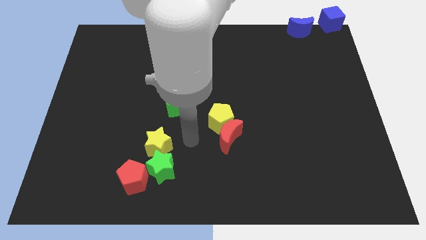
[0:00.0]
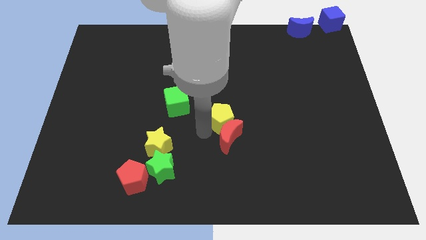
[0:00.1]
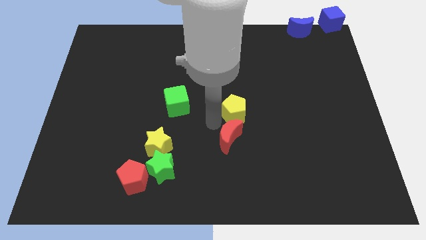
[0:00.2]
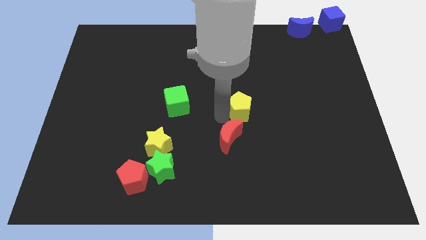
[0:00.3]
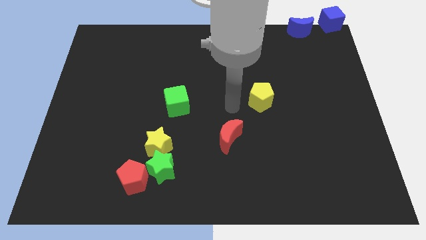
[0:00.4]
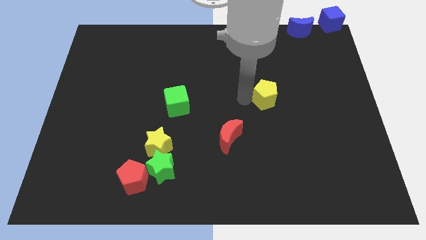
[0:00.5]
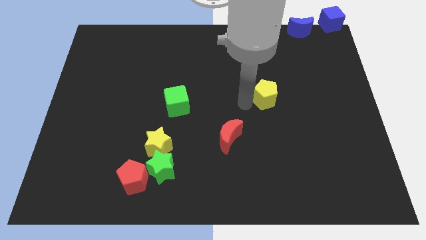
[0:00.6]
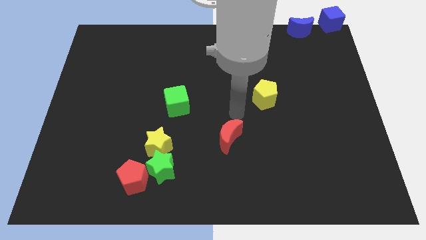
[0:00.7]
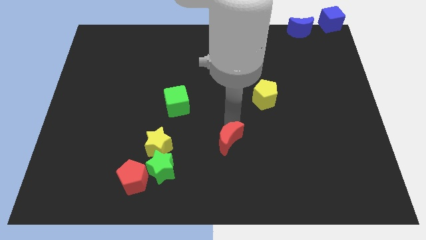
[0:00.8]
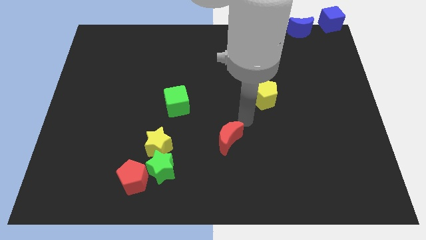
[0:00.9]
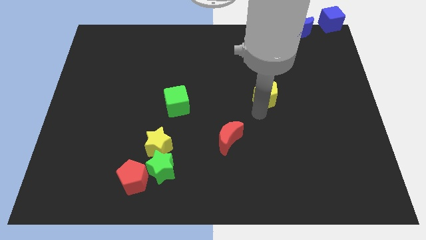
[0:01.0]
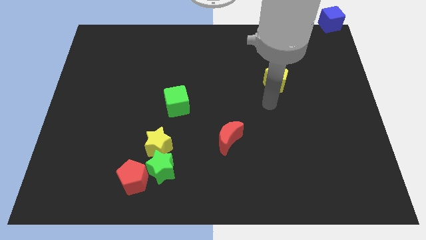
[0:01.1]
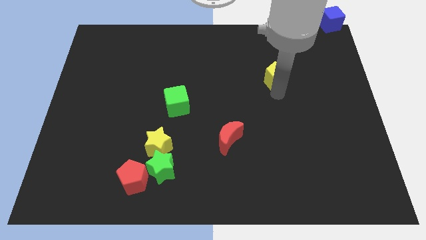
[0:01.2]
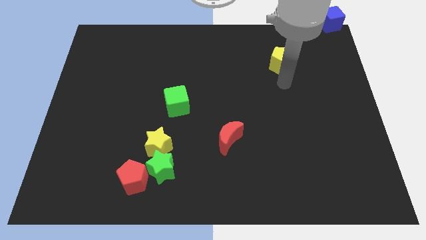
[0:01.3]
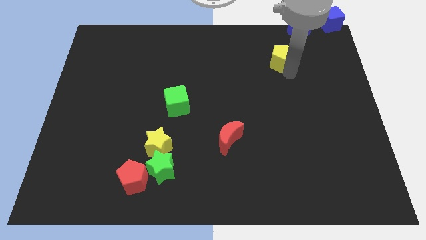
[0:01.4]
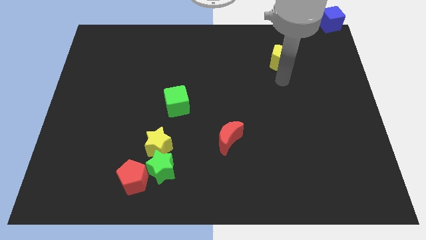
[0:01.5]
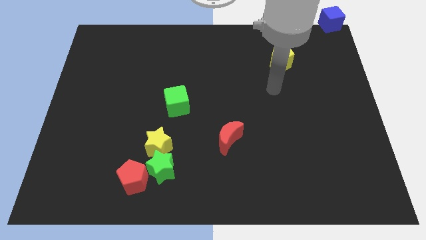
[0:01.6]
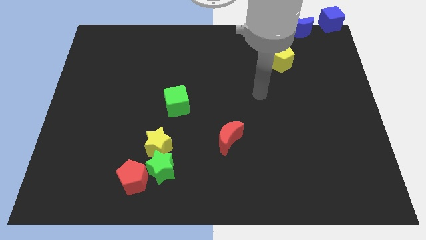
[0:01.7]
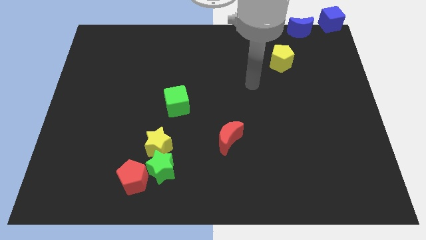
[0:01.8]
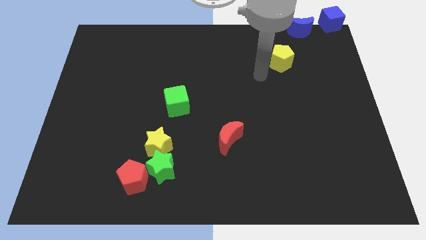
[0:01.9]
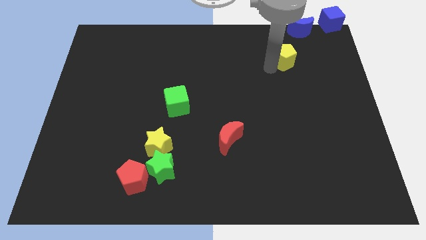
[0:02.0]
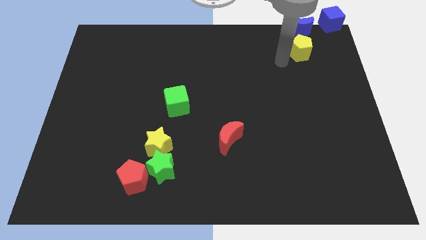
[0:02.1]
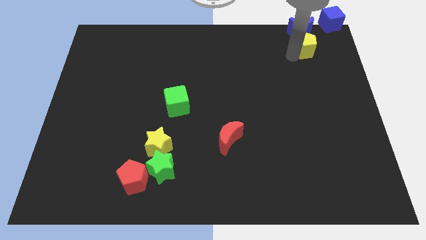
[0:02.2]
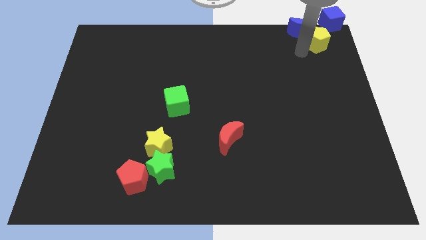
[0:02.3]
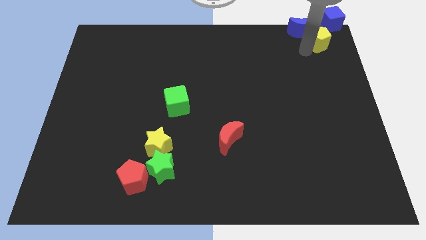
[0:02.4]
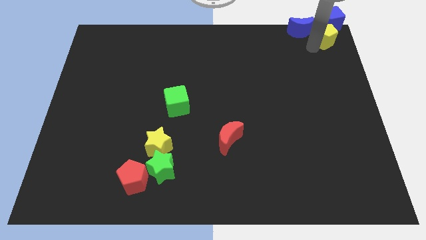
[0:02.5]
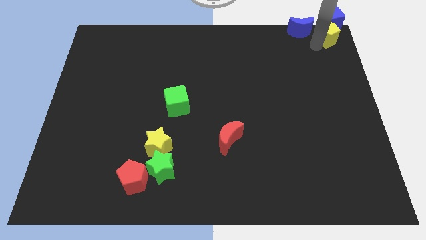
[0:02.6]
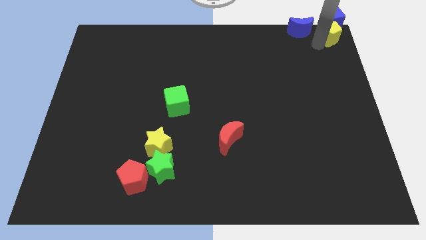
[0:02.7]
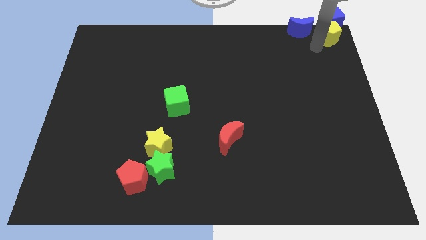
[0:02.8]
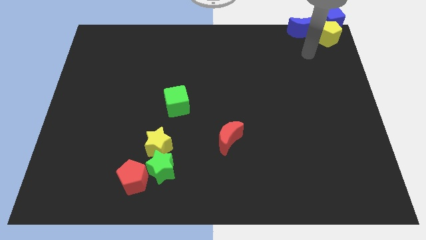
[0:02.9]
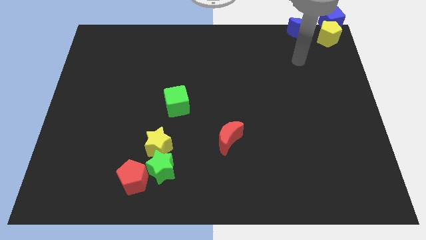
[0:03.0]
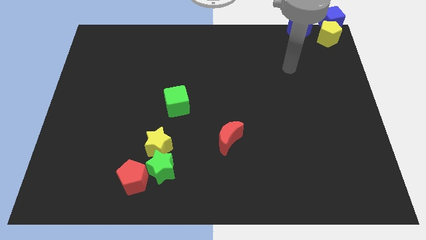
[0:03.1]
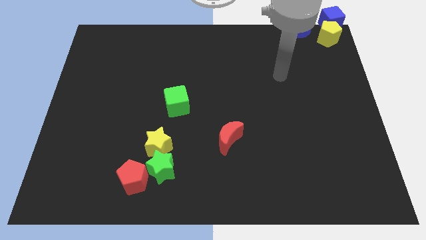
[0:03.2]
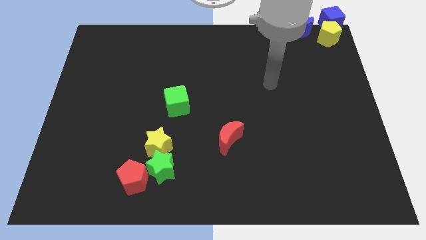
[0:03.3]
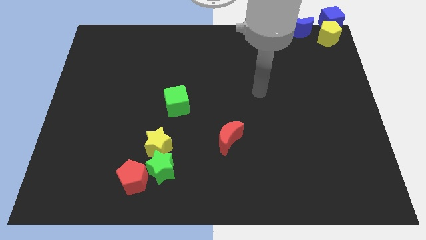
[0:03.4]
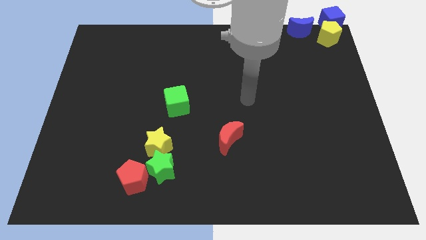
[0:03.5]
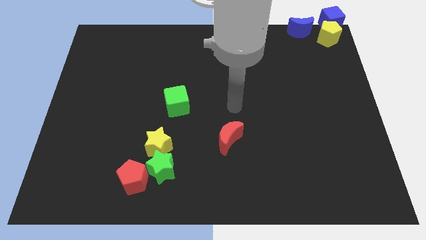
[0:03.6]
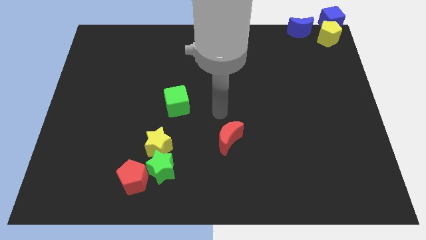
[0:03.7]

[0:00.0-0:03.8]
place the yellow pentagon below the blue cube

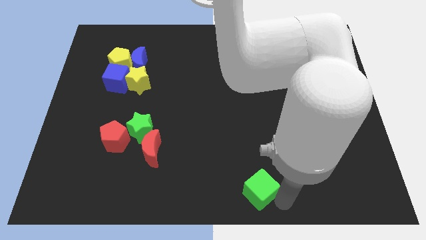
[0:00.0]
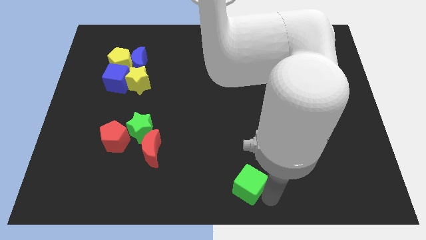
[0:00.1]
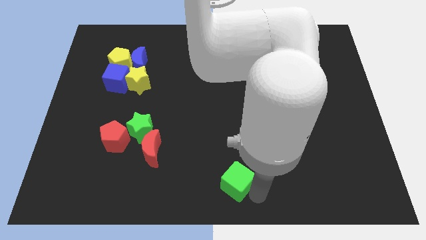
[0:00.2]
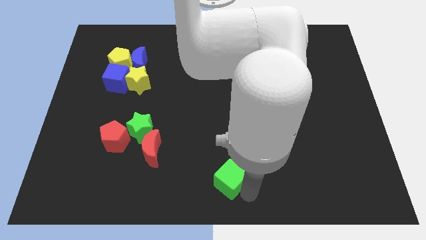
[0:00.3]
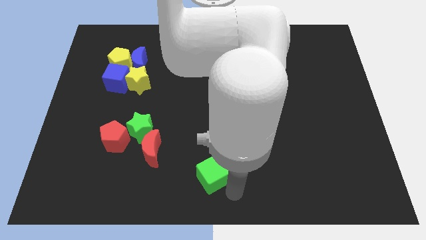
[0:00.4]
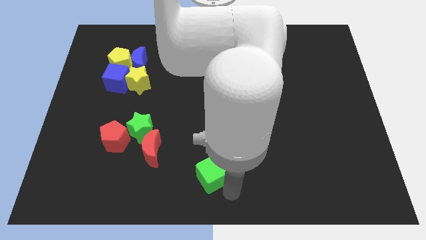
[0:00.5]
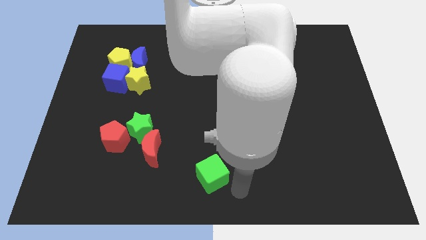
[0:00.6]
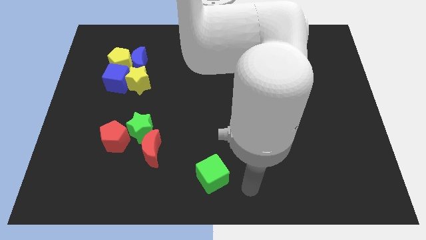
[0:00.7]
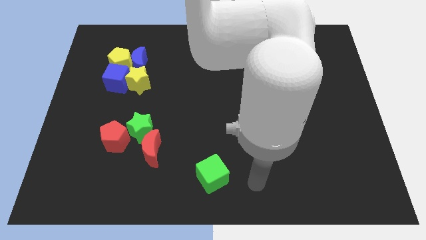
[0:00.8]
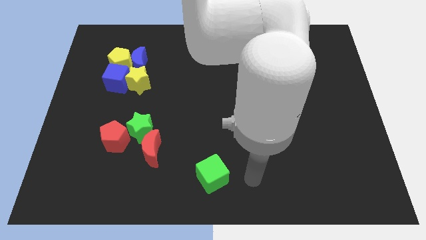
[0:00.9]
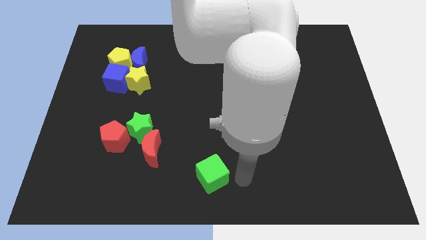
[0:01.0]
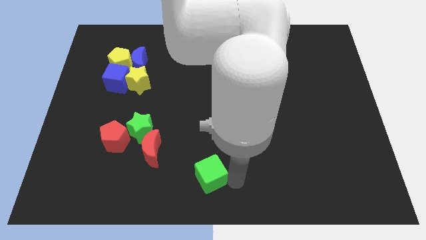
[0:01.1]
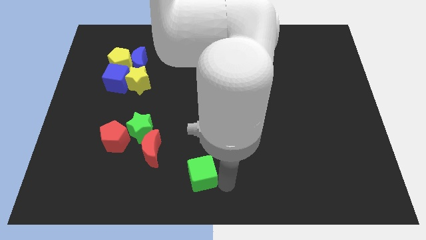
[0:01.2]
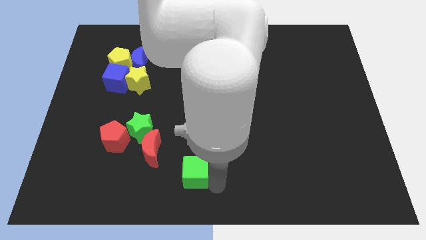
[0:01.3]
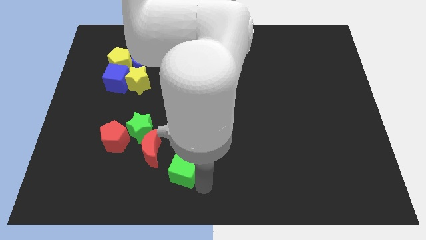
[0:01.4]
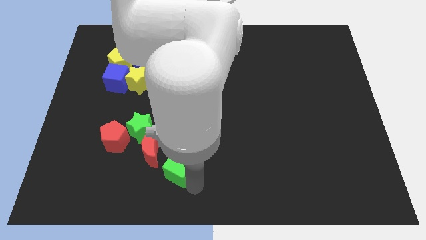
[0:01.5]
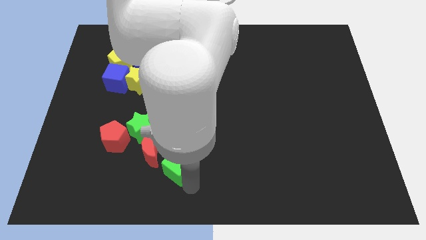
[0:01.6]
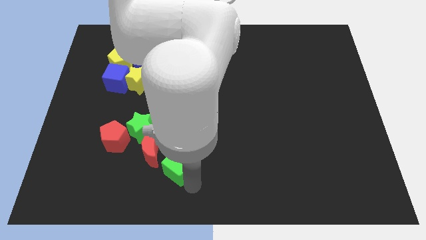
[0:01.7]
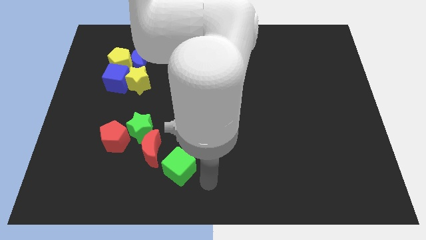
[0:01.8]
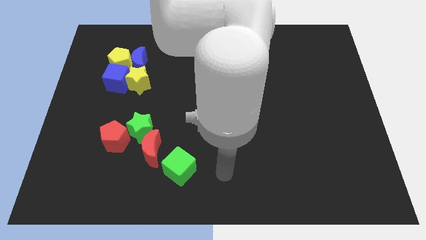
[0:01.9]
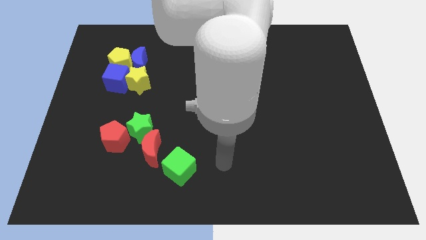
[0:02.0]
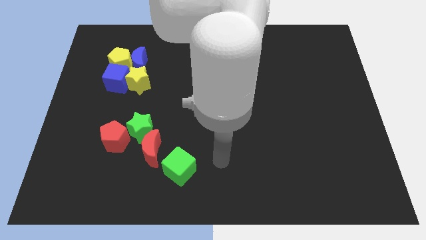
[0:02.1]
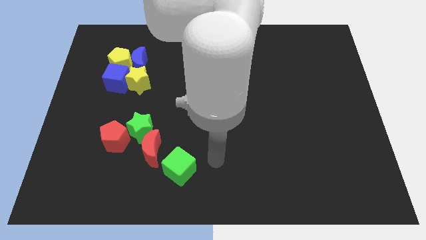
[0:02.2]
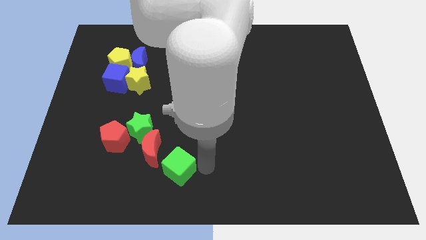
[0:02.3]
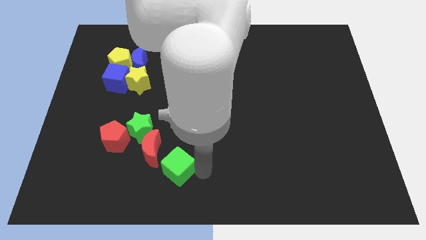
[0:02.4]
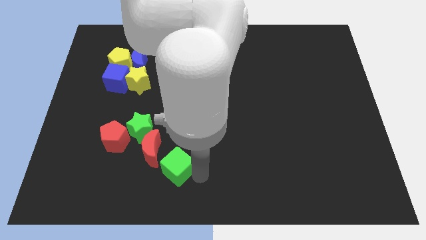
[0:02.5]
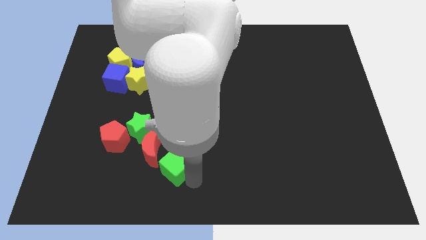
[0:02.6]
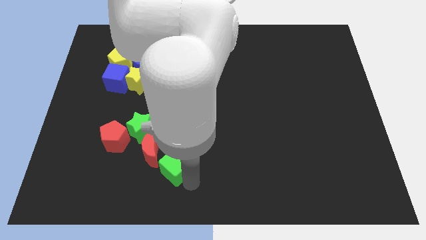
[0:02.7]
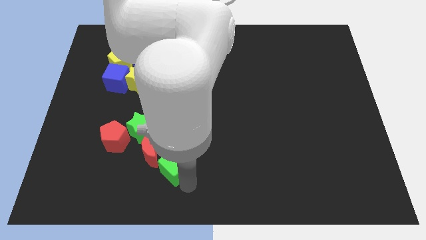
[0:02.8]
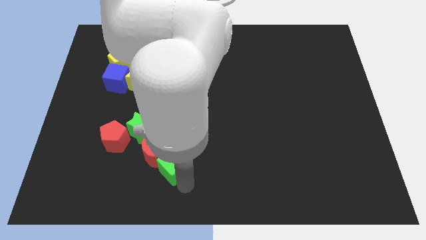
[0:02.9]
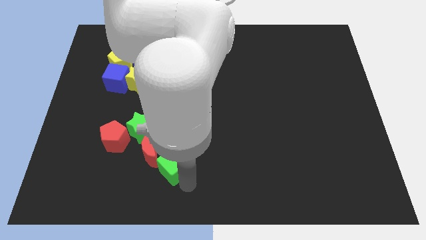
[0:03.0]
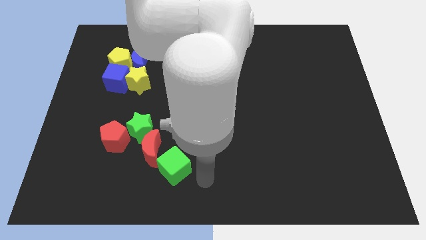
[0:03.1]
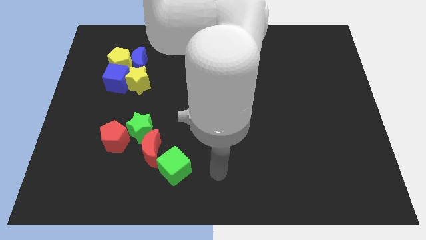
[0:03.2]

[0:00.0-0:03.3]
place the green cube to the bottom right of the red crescent

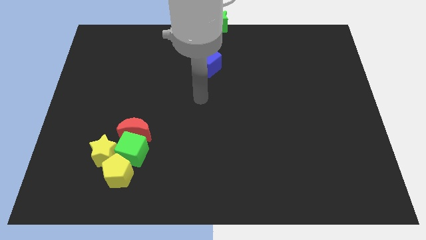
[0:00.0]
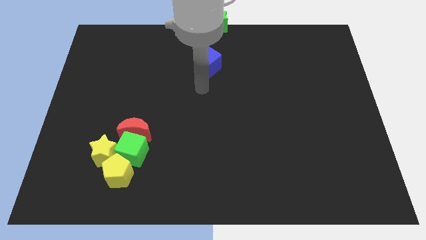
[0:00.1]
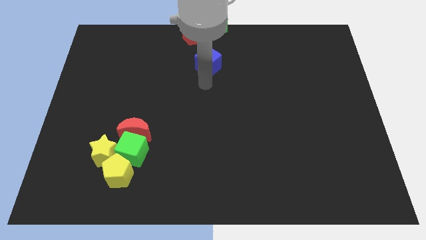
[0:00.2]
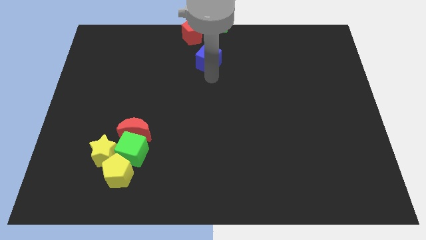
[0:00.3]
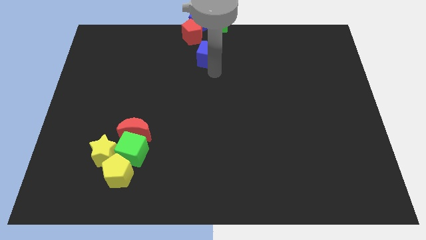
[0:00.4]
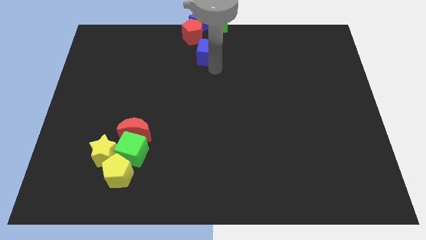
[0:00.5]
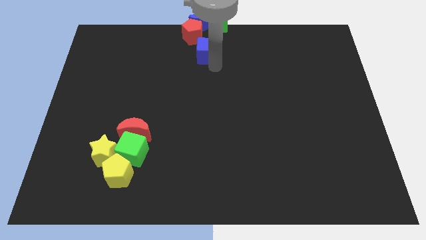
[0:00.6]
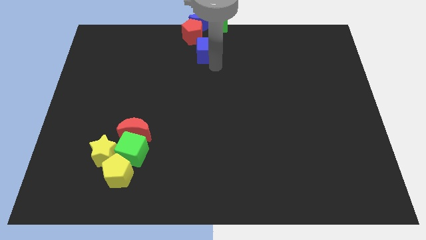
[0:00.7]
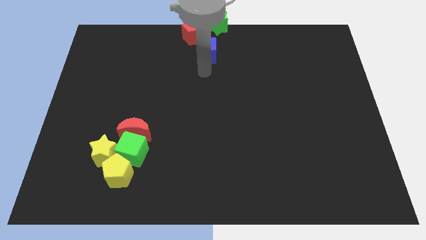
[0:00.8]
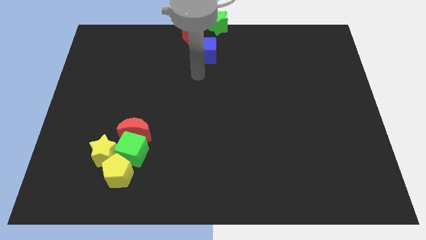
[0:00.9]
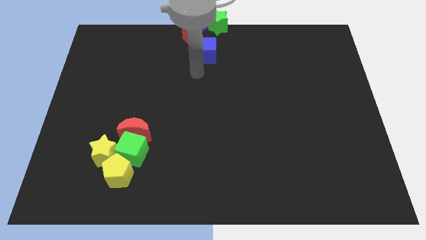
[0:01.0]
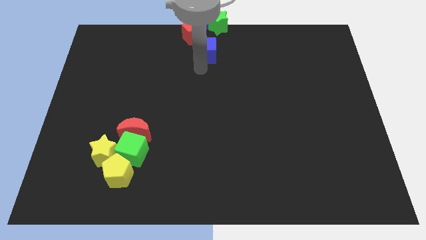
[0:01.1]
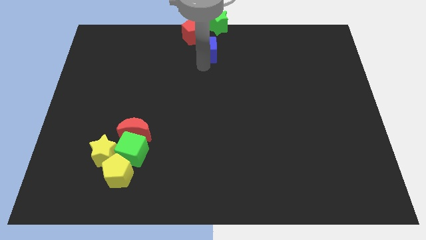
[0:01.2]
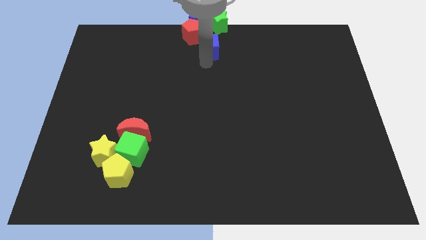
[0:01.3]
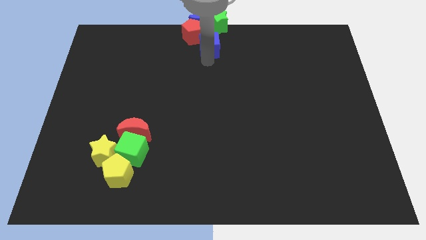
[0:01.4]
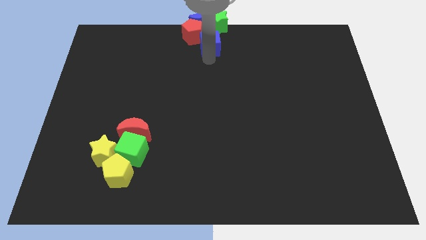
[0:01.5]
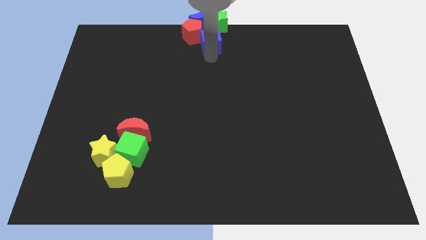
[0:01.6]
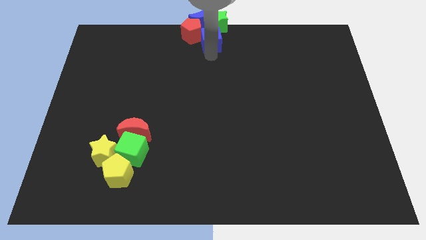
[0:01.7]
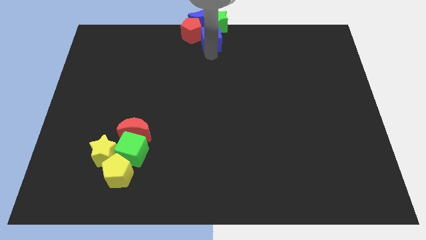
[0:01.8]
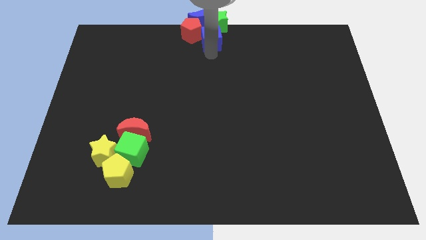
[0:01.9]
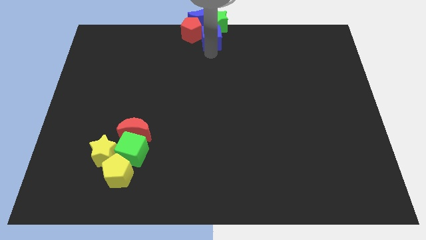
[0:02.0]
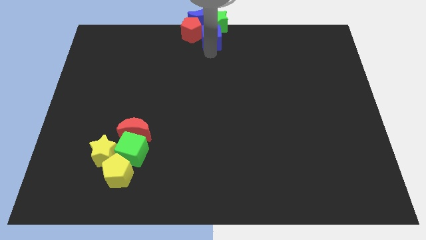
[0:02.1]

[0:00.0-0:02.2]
push the blue cube into the red pentagon
